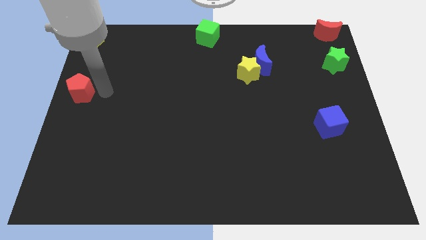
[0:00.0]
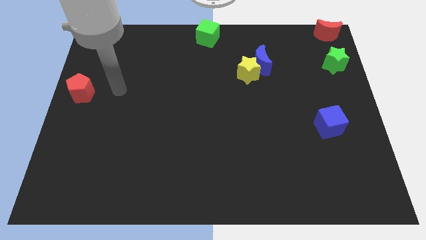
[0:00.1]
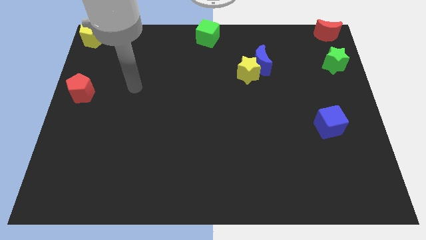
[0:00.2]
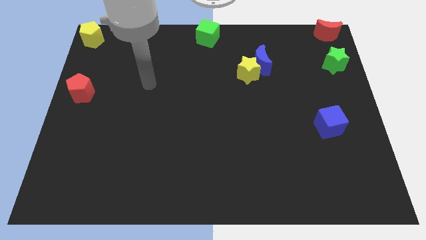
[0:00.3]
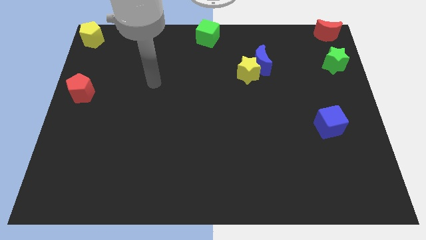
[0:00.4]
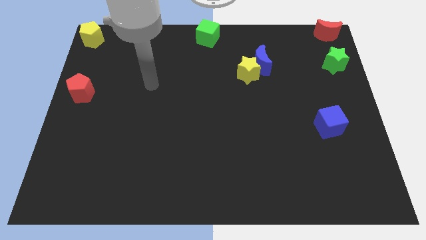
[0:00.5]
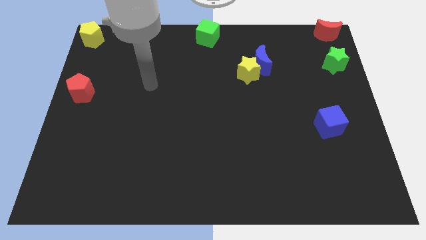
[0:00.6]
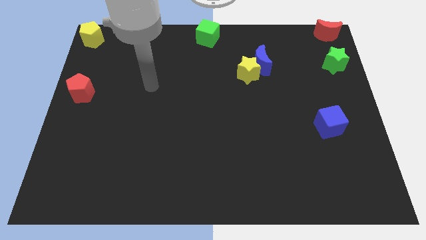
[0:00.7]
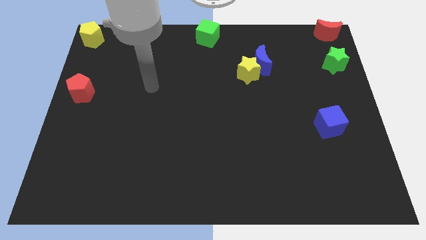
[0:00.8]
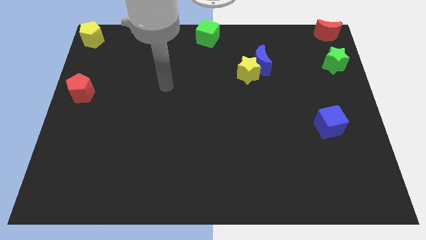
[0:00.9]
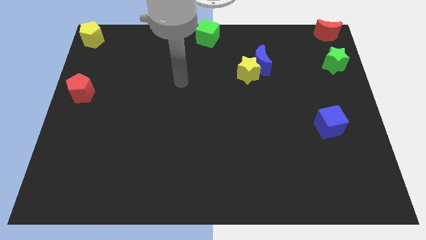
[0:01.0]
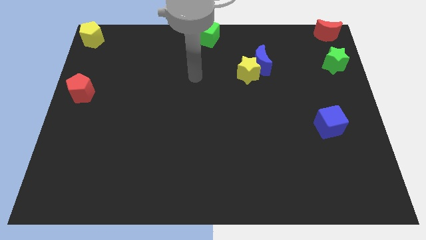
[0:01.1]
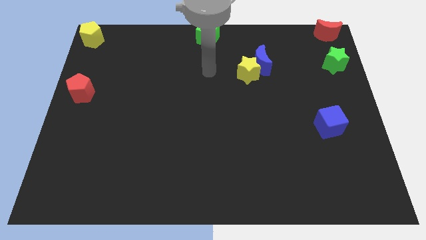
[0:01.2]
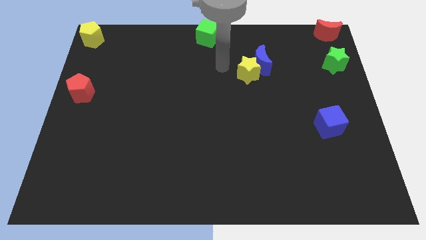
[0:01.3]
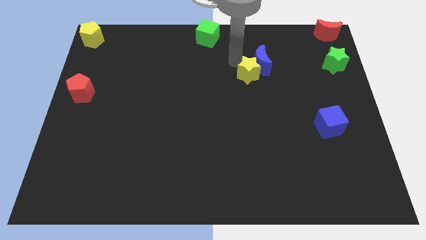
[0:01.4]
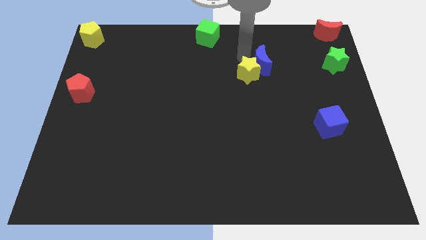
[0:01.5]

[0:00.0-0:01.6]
go away from the red pentagon

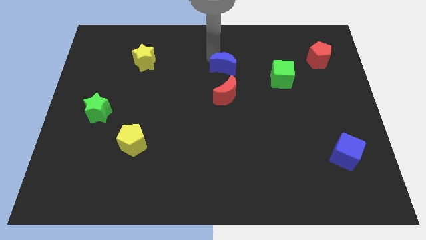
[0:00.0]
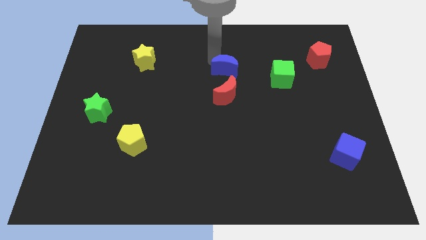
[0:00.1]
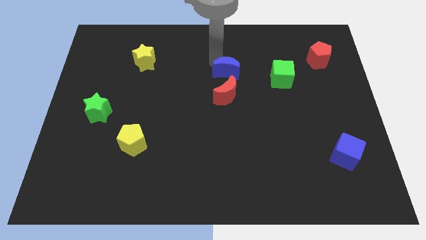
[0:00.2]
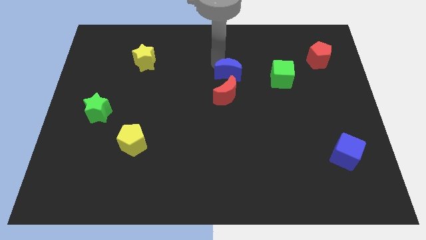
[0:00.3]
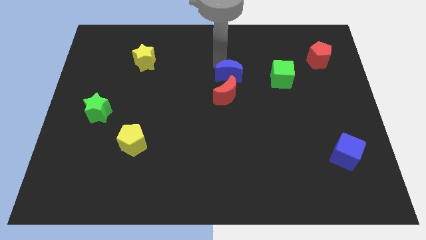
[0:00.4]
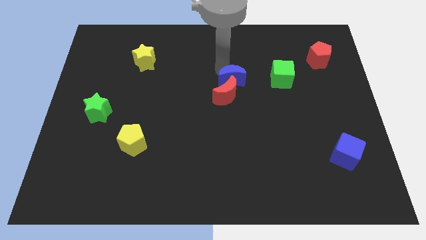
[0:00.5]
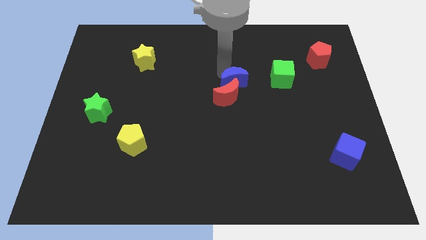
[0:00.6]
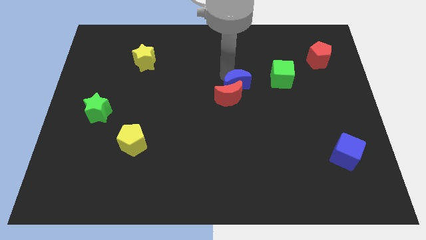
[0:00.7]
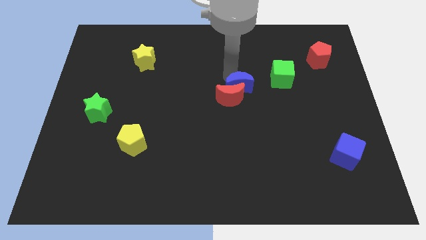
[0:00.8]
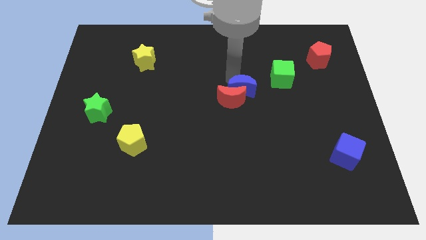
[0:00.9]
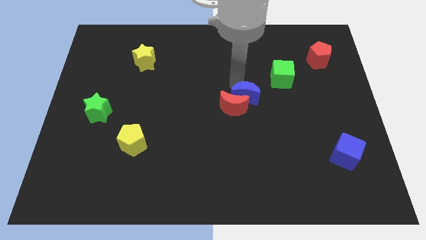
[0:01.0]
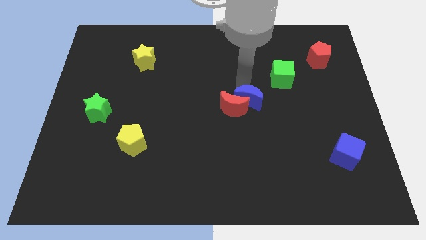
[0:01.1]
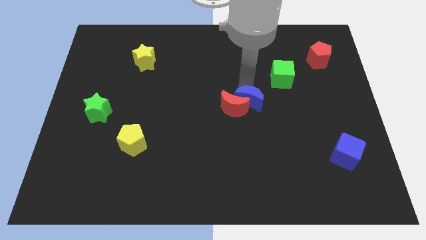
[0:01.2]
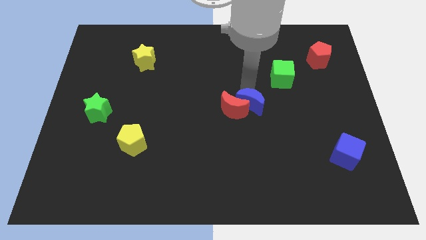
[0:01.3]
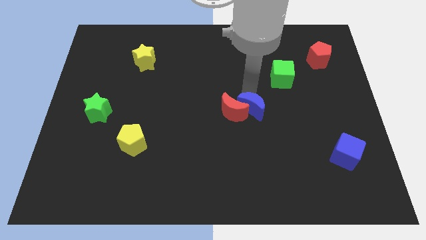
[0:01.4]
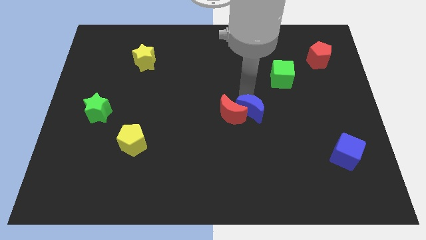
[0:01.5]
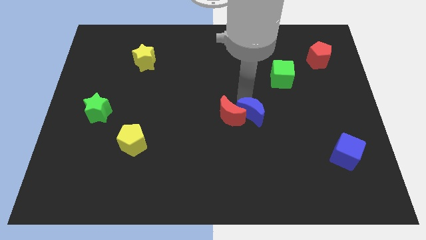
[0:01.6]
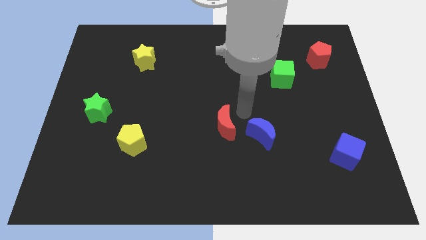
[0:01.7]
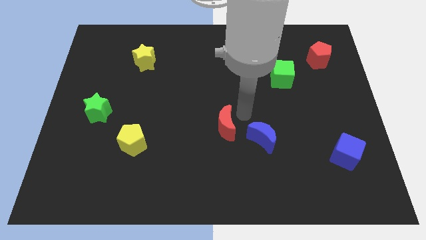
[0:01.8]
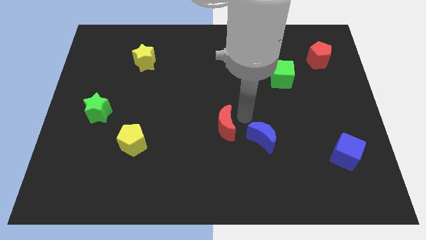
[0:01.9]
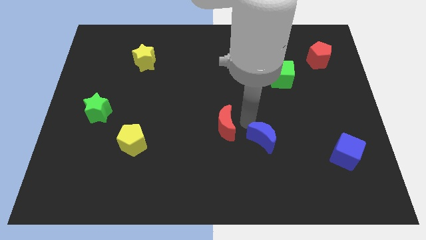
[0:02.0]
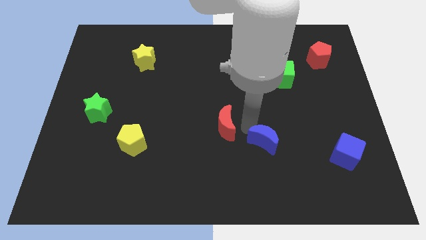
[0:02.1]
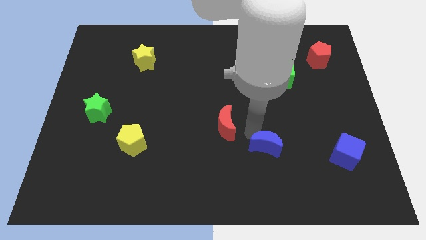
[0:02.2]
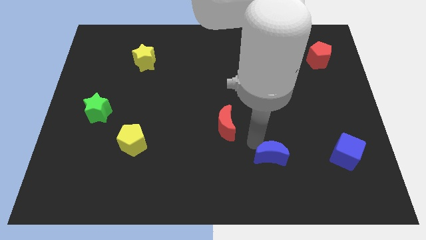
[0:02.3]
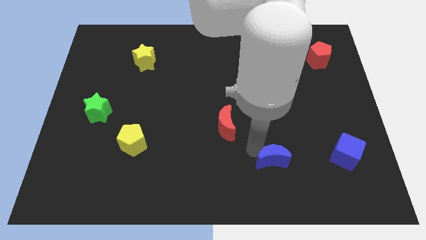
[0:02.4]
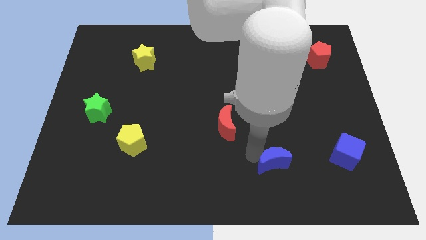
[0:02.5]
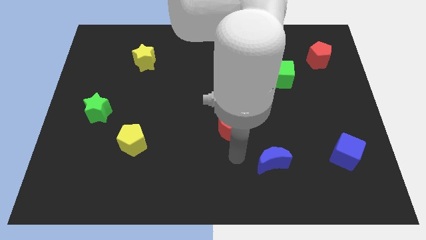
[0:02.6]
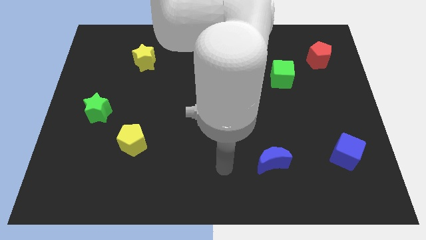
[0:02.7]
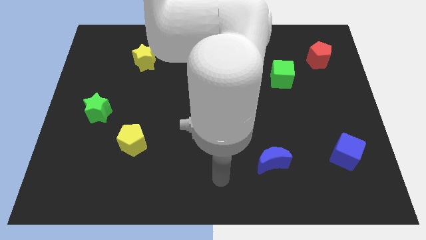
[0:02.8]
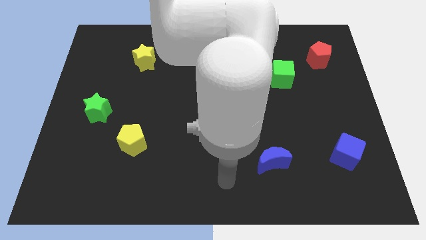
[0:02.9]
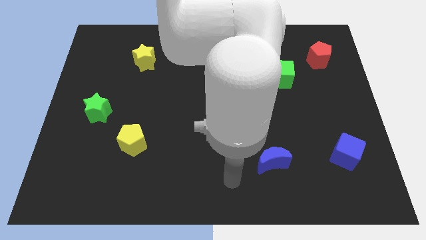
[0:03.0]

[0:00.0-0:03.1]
separate the red and blue moons

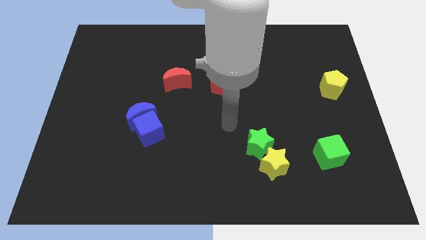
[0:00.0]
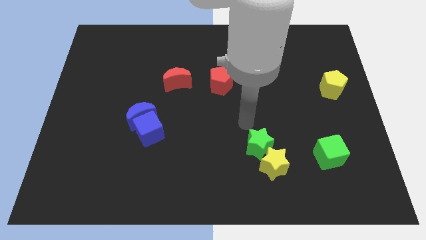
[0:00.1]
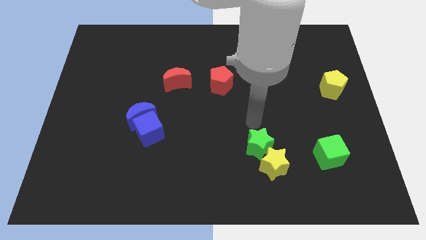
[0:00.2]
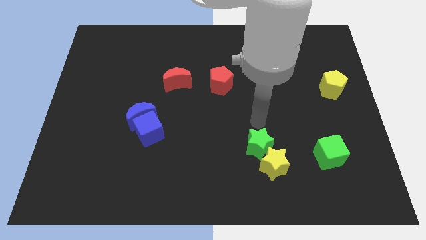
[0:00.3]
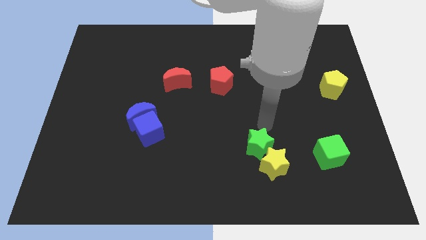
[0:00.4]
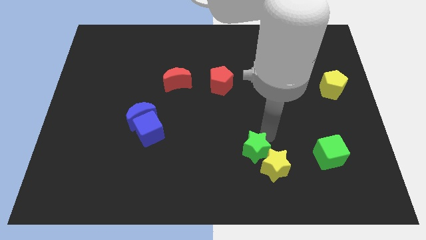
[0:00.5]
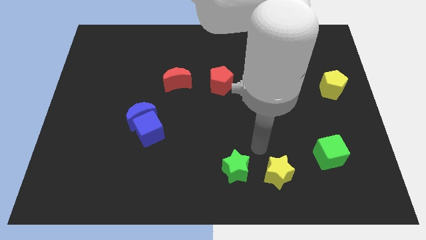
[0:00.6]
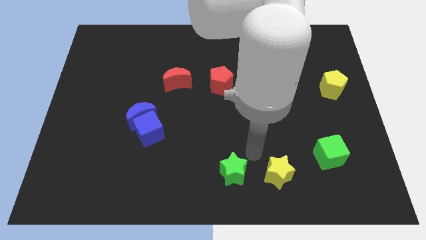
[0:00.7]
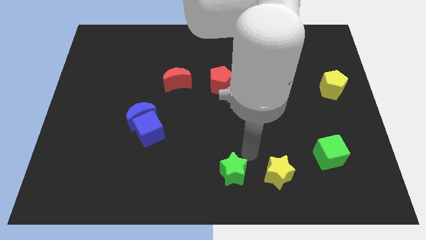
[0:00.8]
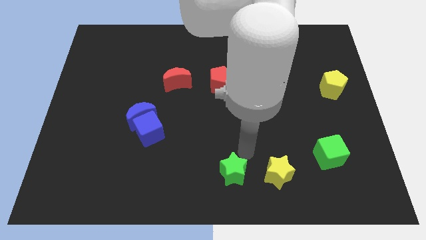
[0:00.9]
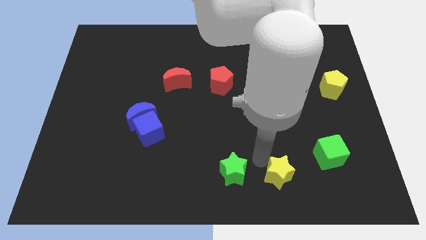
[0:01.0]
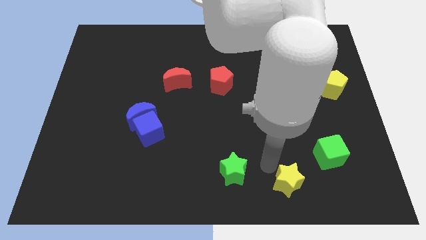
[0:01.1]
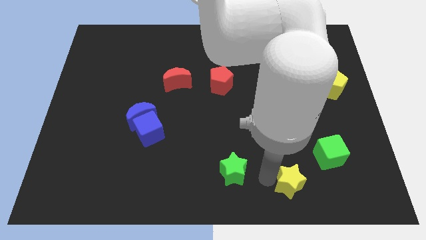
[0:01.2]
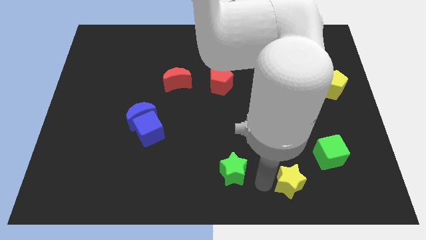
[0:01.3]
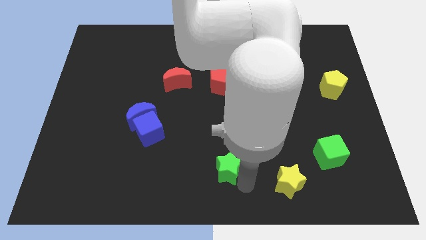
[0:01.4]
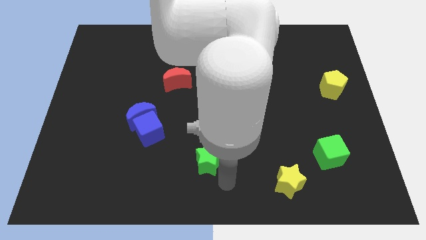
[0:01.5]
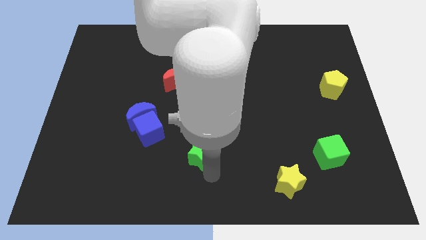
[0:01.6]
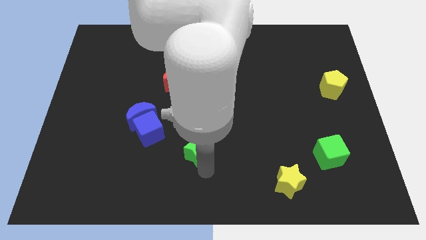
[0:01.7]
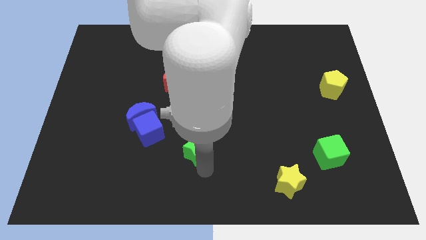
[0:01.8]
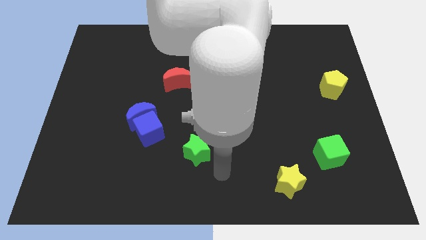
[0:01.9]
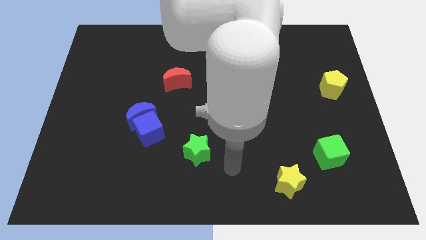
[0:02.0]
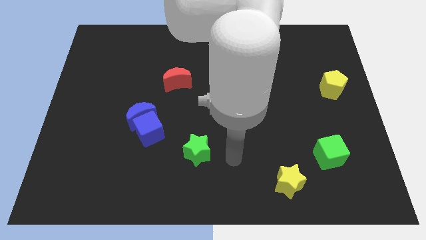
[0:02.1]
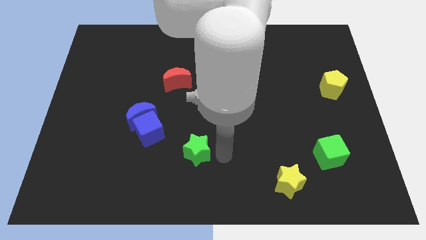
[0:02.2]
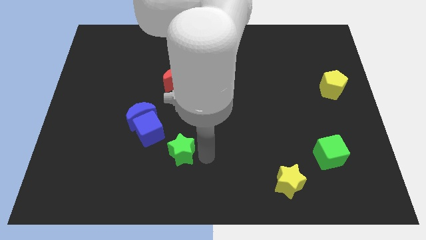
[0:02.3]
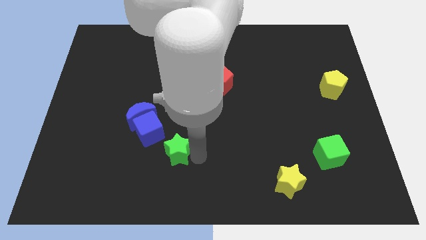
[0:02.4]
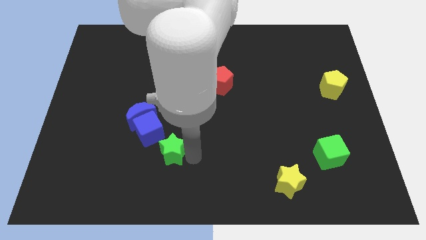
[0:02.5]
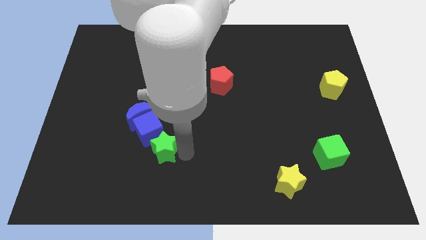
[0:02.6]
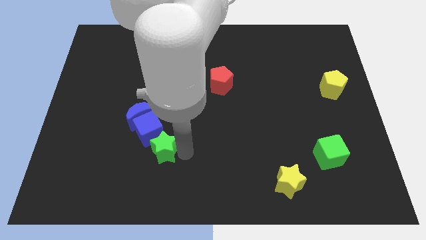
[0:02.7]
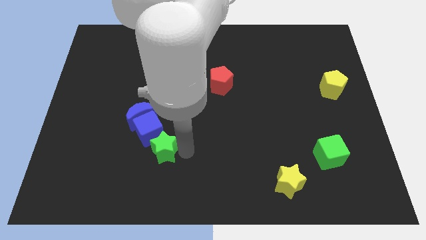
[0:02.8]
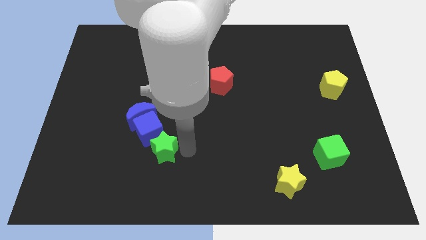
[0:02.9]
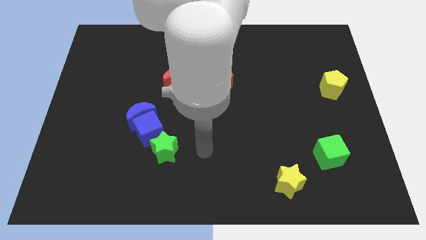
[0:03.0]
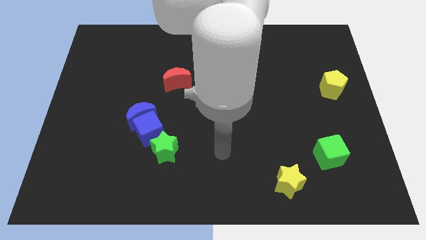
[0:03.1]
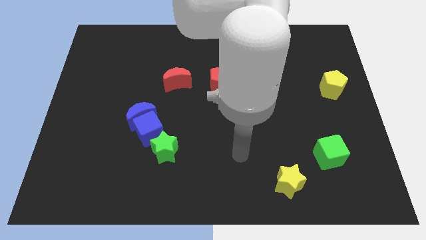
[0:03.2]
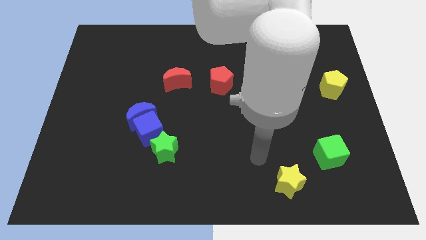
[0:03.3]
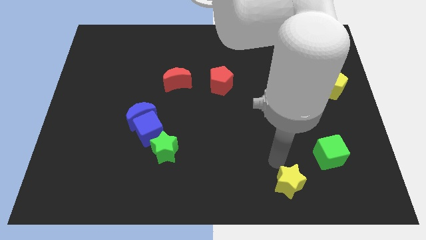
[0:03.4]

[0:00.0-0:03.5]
move the green star to the bottom side of the blue cube

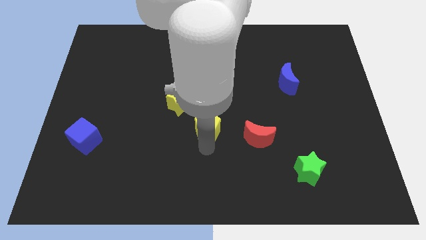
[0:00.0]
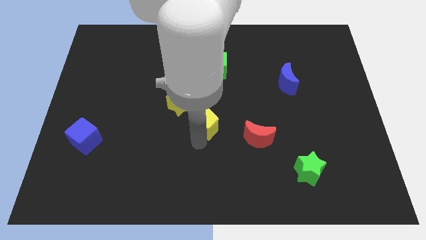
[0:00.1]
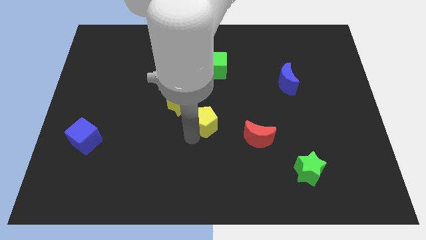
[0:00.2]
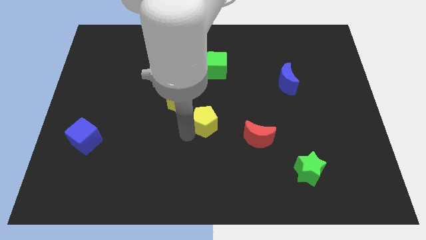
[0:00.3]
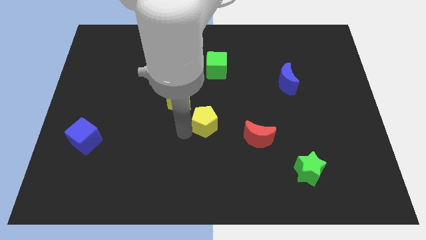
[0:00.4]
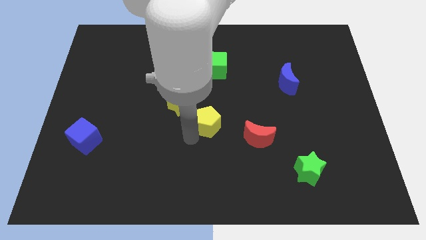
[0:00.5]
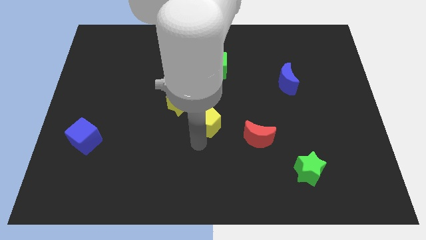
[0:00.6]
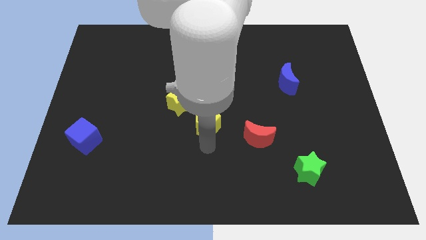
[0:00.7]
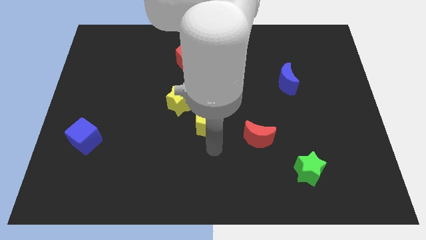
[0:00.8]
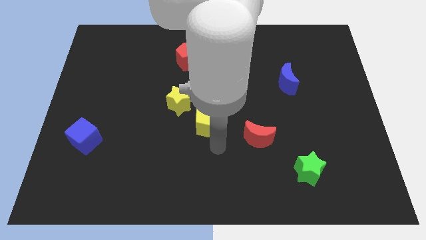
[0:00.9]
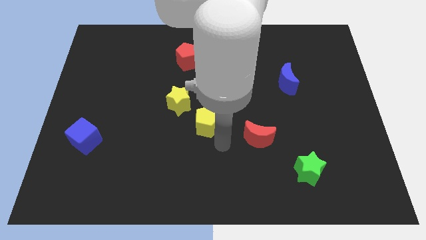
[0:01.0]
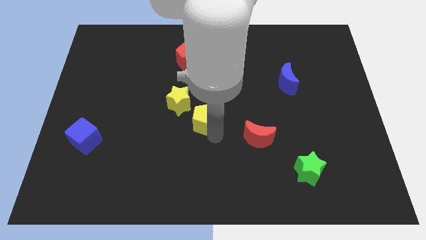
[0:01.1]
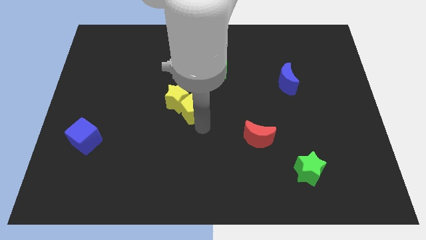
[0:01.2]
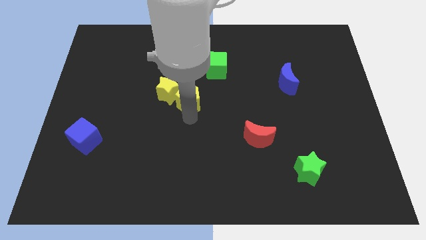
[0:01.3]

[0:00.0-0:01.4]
move the yellow pentagon into the yellow star
